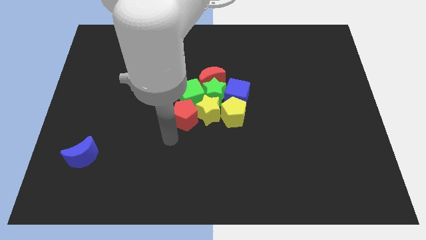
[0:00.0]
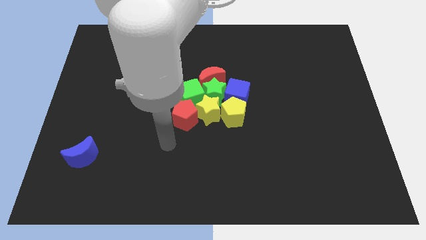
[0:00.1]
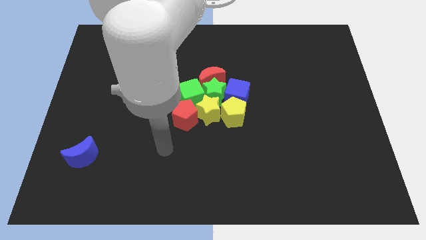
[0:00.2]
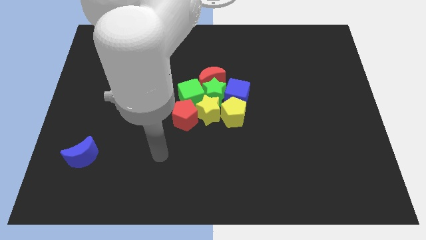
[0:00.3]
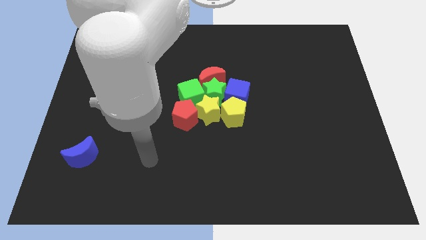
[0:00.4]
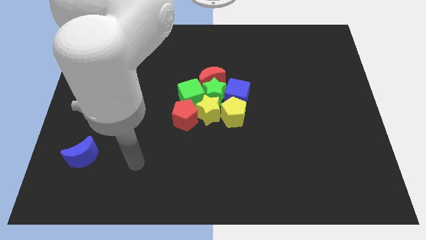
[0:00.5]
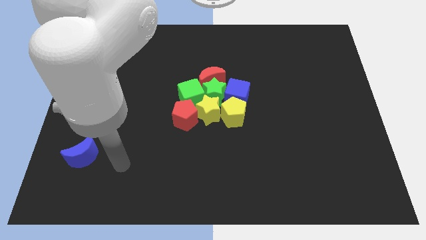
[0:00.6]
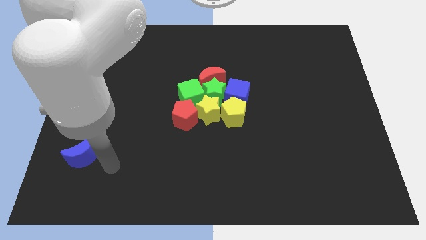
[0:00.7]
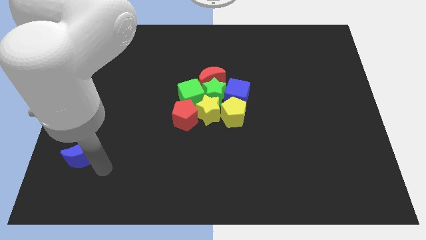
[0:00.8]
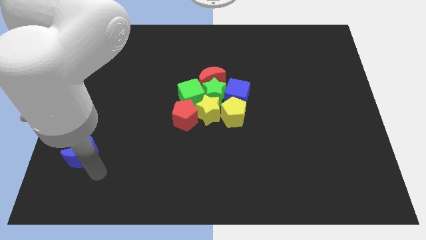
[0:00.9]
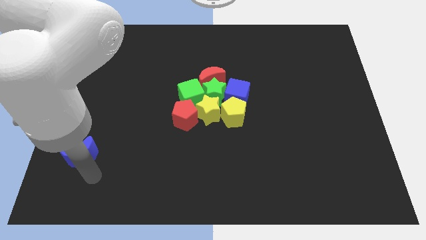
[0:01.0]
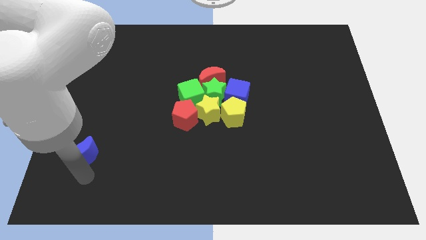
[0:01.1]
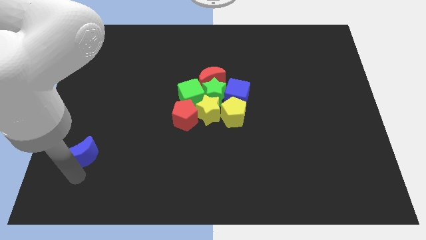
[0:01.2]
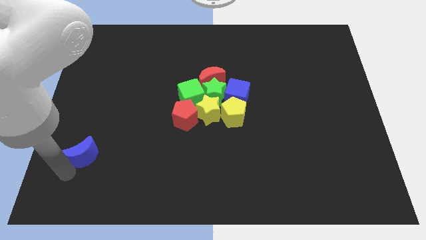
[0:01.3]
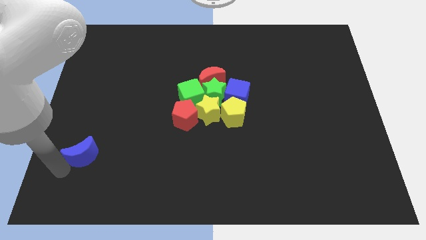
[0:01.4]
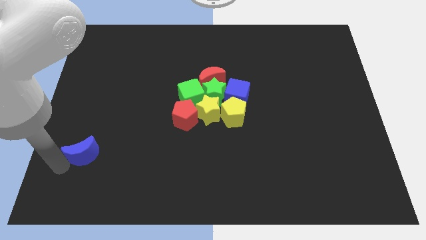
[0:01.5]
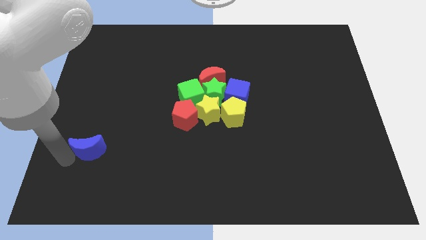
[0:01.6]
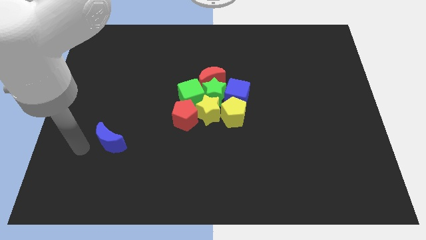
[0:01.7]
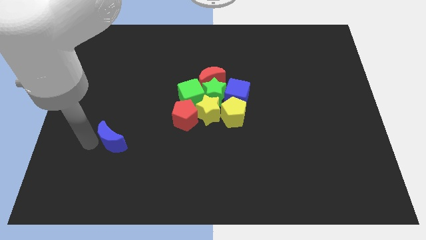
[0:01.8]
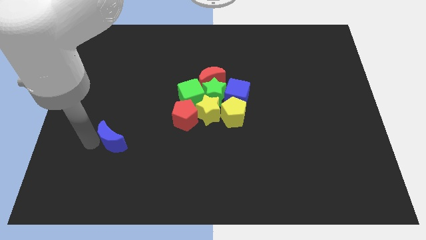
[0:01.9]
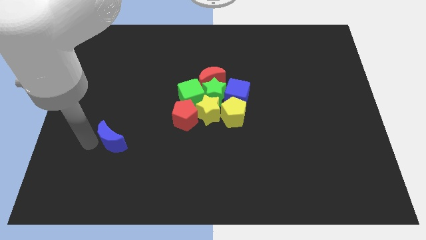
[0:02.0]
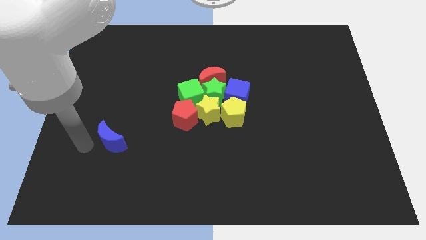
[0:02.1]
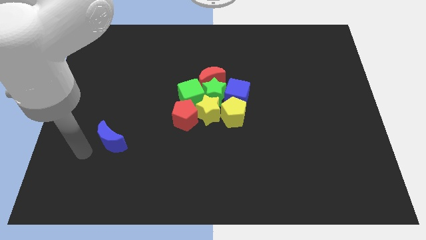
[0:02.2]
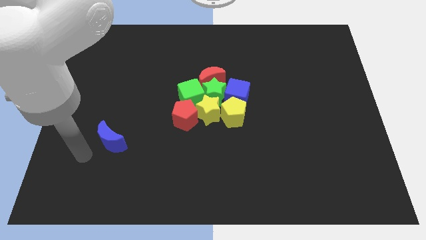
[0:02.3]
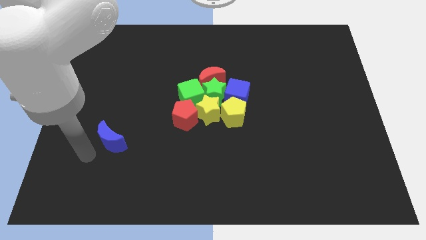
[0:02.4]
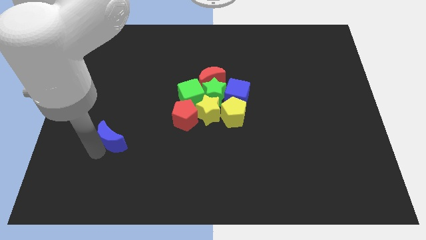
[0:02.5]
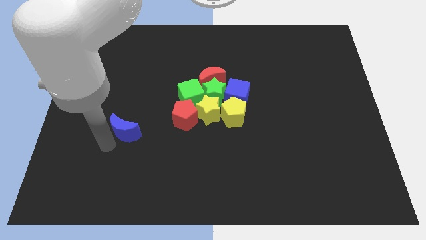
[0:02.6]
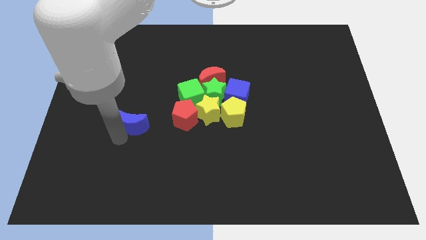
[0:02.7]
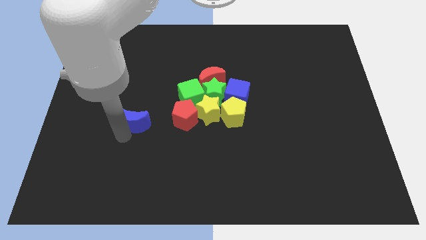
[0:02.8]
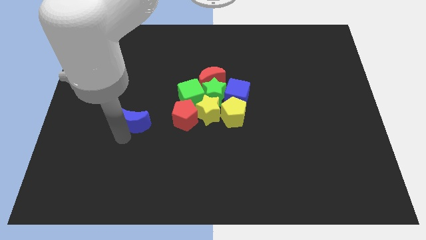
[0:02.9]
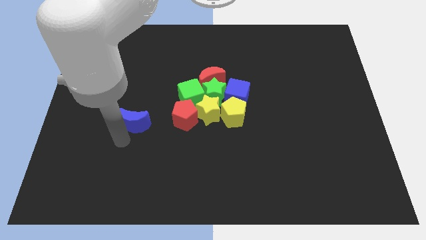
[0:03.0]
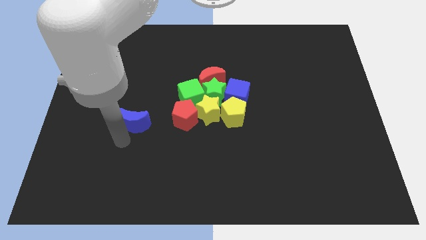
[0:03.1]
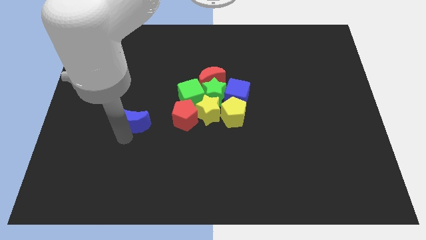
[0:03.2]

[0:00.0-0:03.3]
place the blue moon left to the red pentagon

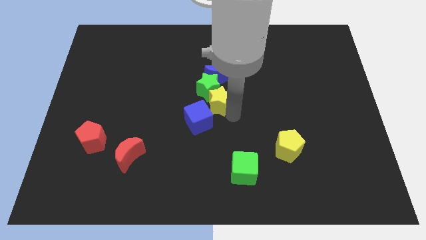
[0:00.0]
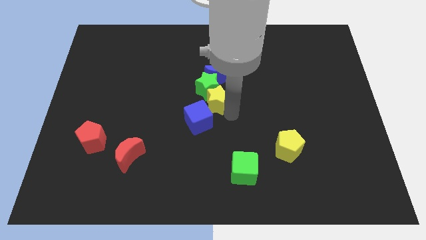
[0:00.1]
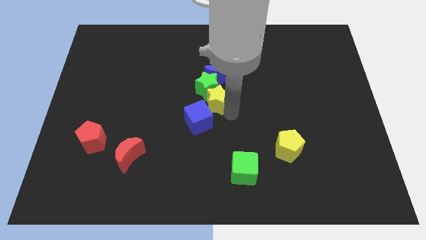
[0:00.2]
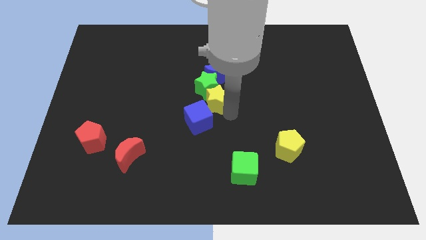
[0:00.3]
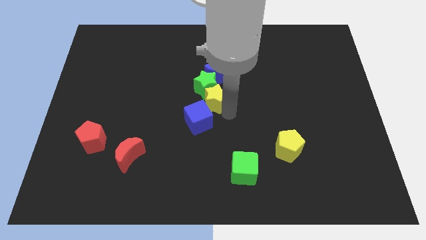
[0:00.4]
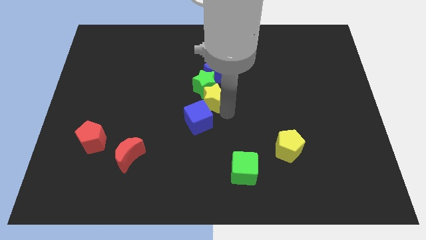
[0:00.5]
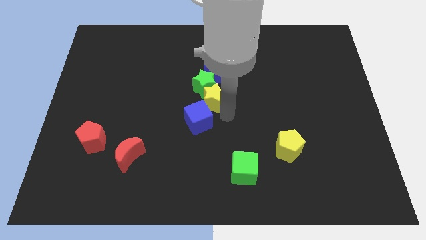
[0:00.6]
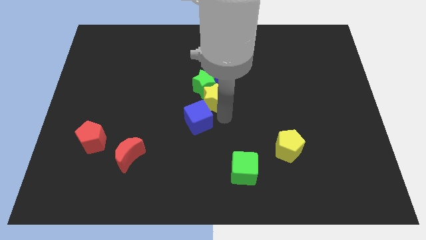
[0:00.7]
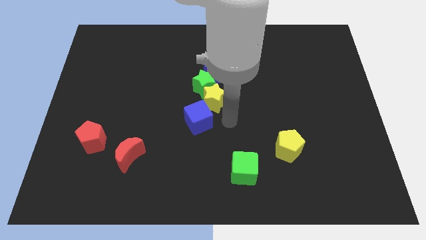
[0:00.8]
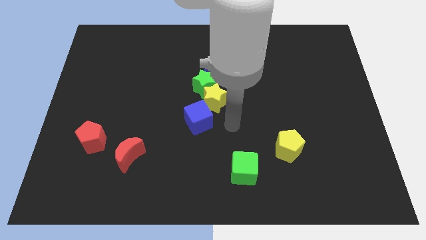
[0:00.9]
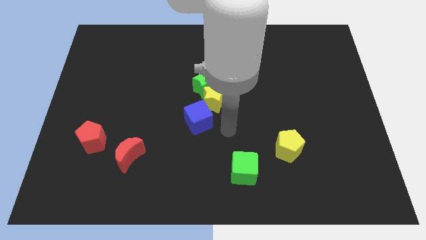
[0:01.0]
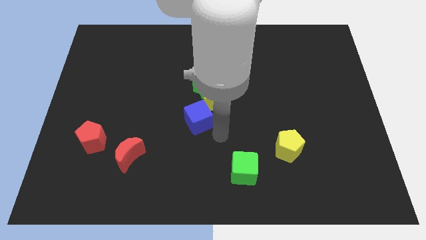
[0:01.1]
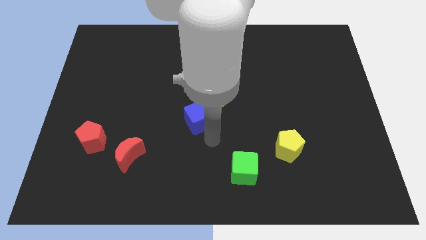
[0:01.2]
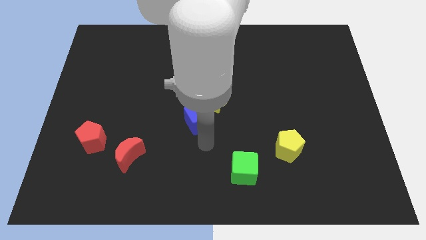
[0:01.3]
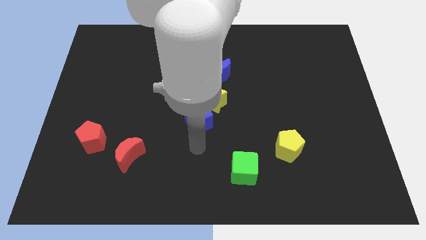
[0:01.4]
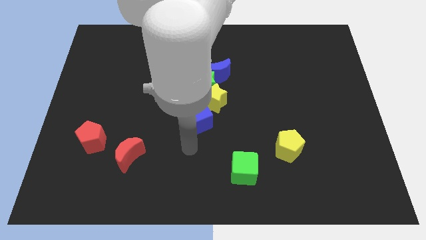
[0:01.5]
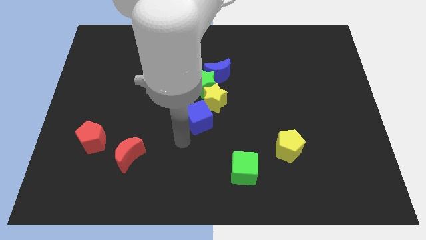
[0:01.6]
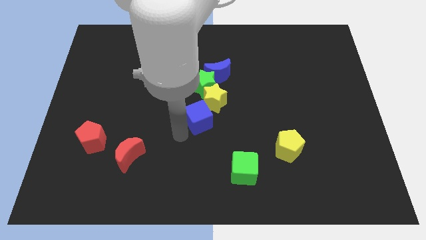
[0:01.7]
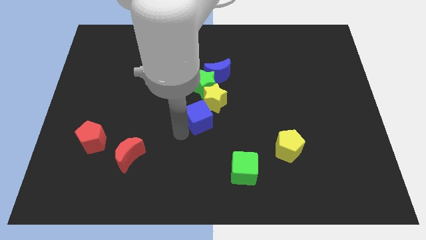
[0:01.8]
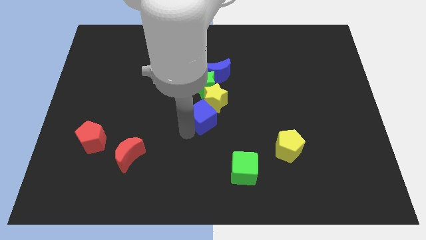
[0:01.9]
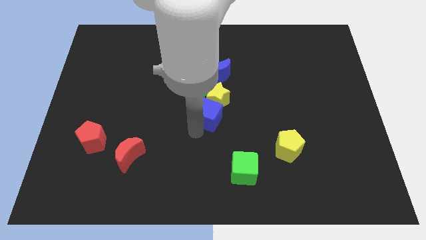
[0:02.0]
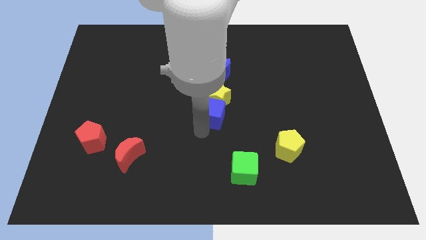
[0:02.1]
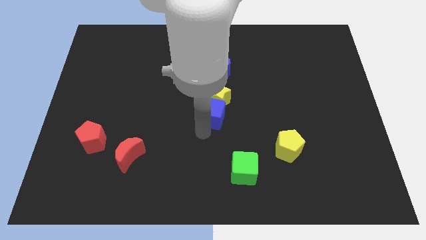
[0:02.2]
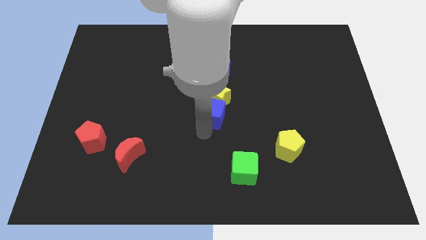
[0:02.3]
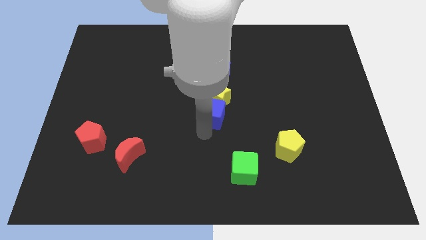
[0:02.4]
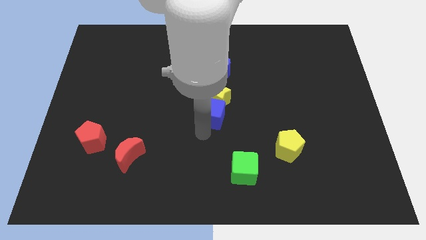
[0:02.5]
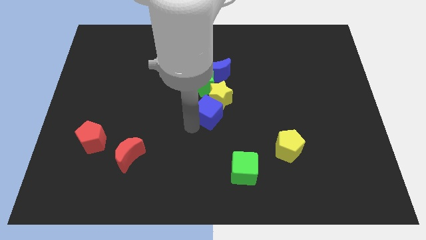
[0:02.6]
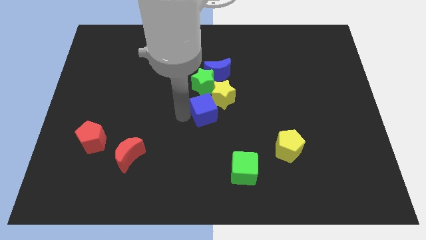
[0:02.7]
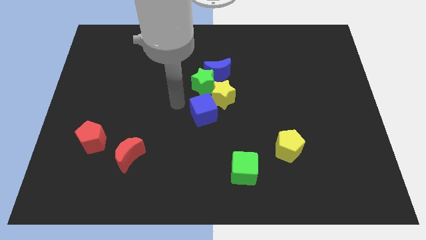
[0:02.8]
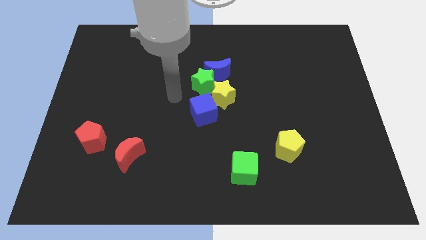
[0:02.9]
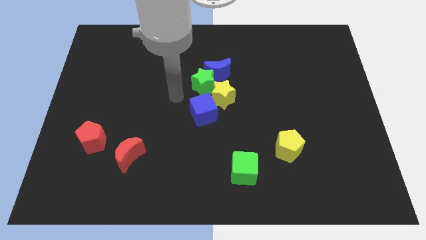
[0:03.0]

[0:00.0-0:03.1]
place the blue cube close to the yellow star

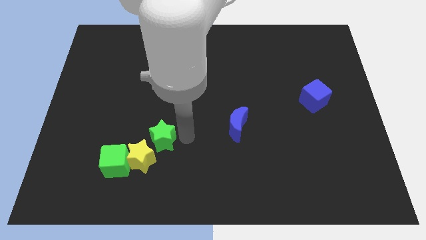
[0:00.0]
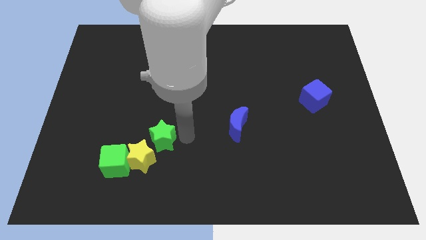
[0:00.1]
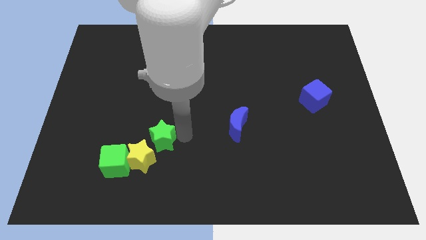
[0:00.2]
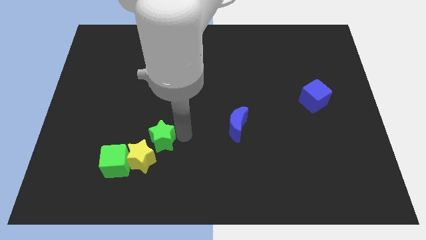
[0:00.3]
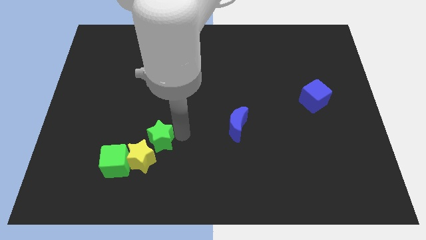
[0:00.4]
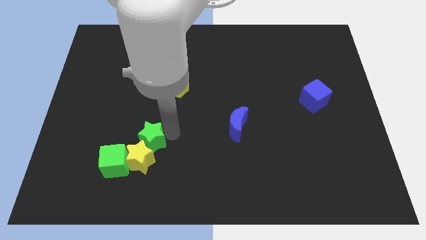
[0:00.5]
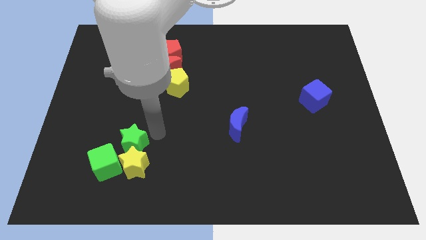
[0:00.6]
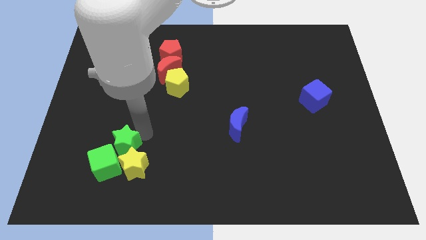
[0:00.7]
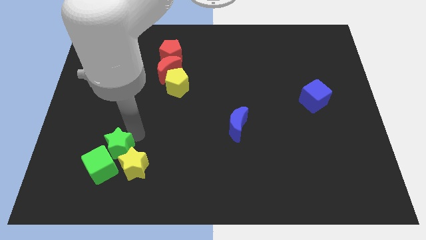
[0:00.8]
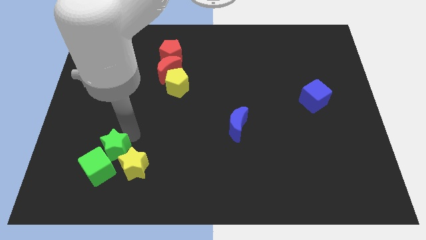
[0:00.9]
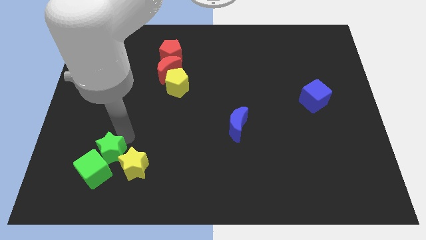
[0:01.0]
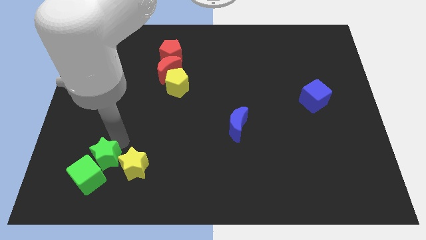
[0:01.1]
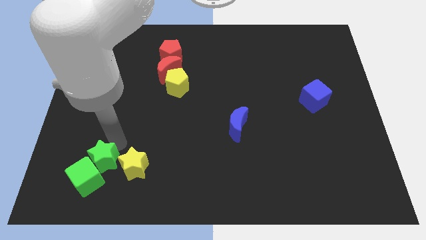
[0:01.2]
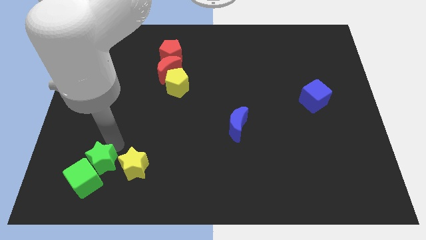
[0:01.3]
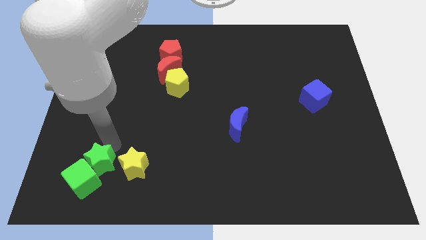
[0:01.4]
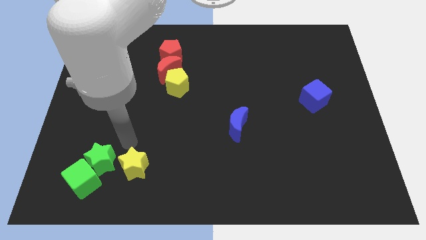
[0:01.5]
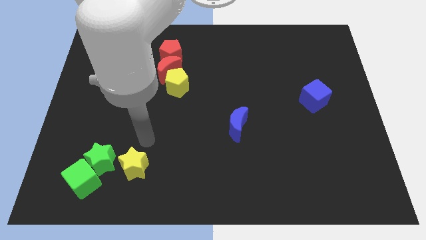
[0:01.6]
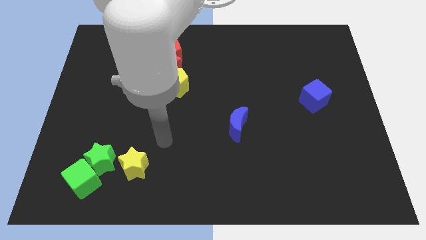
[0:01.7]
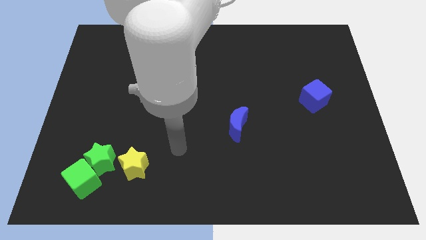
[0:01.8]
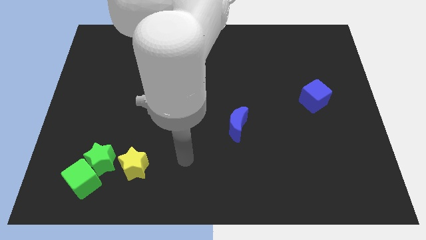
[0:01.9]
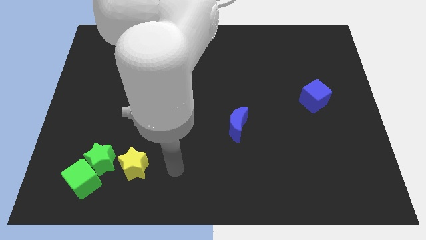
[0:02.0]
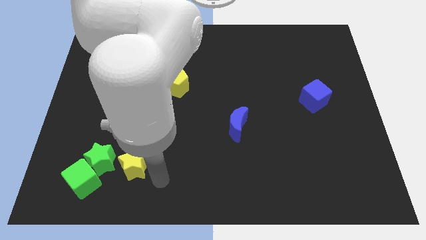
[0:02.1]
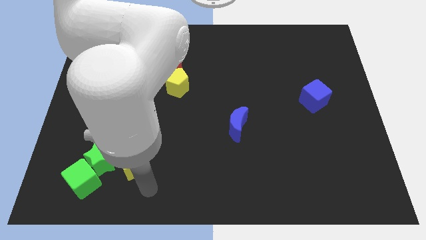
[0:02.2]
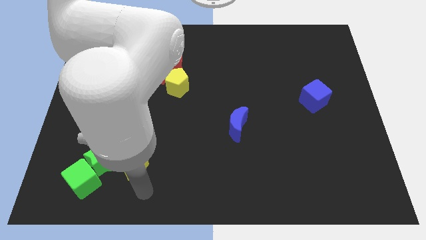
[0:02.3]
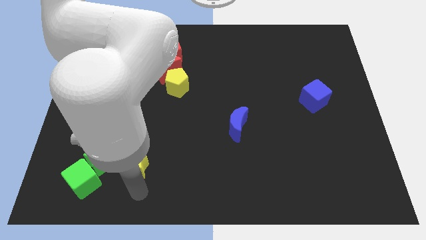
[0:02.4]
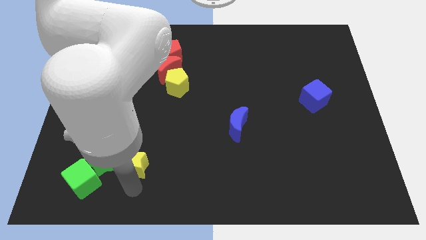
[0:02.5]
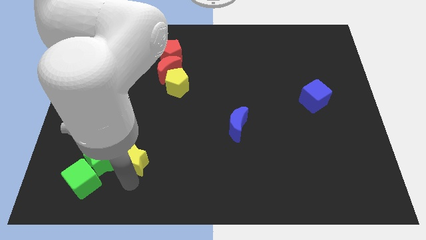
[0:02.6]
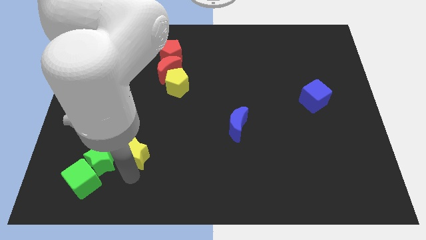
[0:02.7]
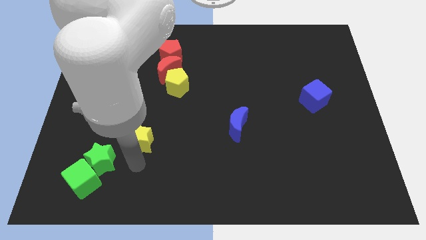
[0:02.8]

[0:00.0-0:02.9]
push green star along with green cube towards bottom left side of the board
